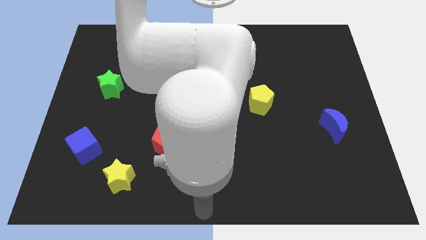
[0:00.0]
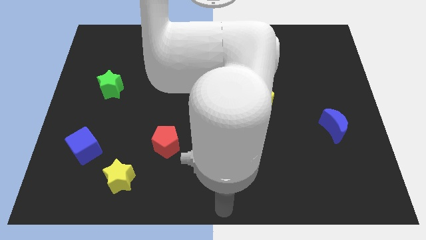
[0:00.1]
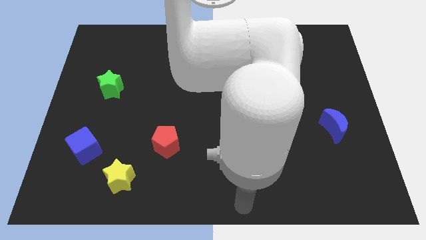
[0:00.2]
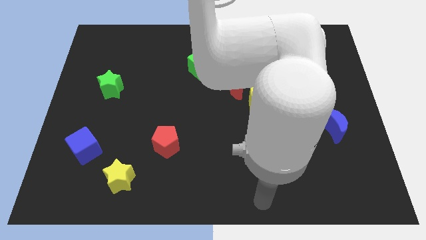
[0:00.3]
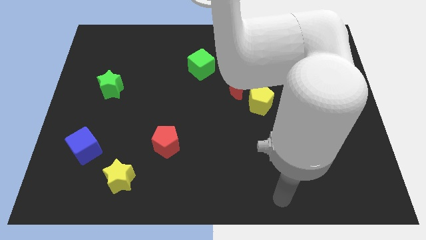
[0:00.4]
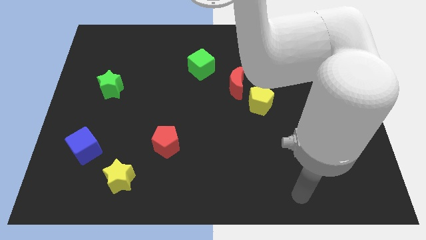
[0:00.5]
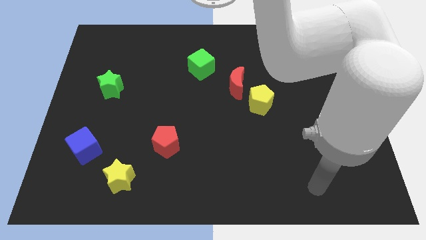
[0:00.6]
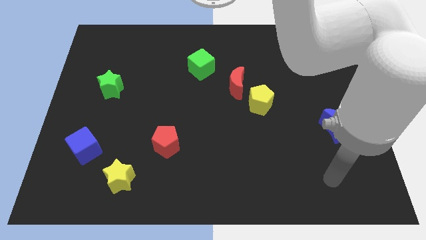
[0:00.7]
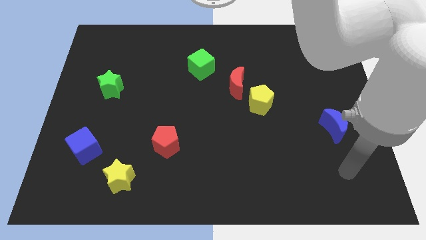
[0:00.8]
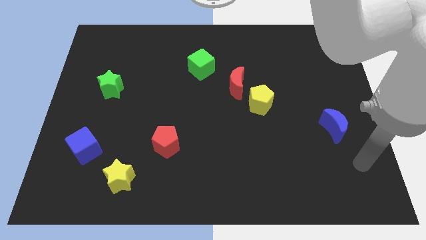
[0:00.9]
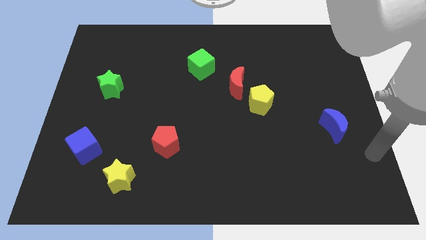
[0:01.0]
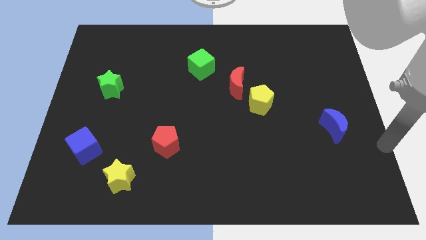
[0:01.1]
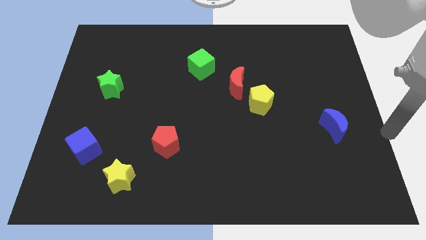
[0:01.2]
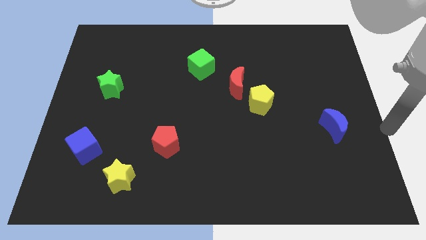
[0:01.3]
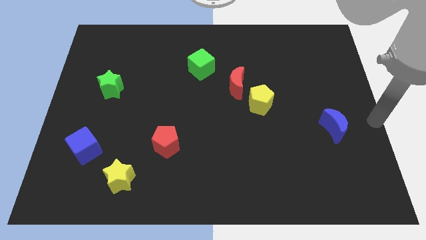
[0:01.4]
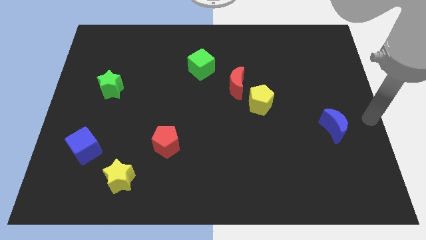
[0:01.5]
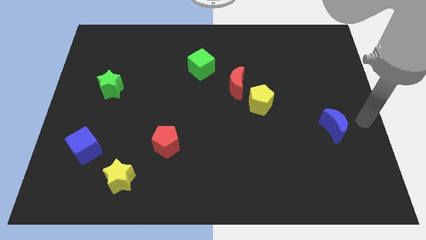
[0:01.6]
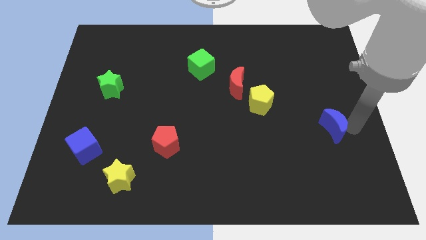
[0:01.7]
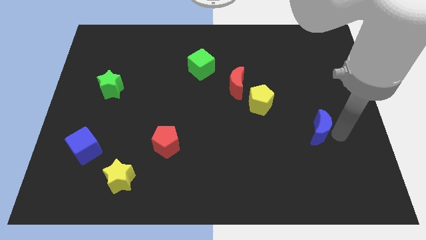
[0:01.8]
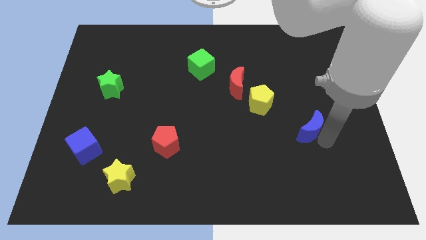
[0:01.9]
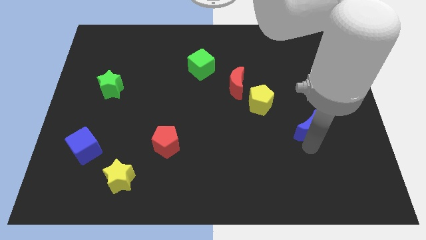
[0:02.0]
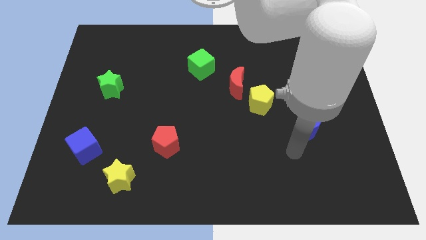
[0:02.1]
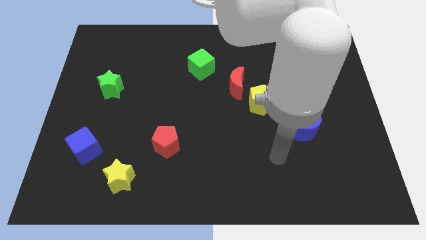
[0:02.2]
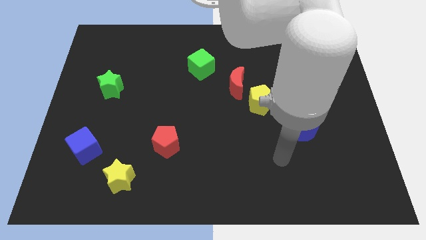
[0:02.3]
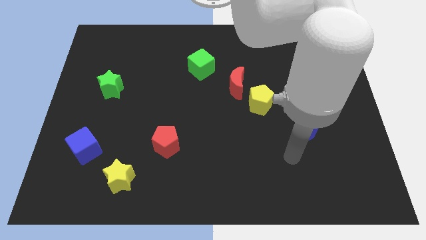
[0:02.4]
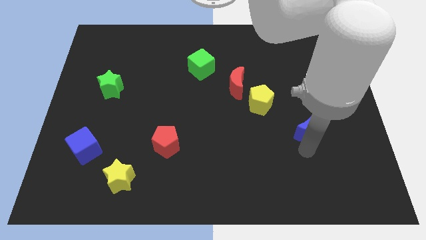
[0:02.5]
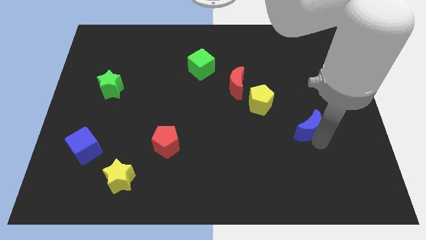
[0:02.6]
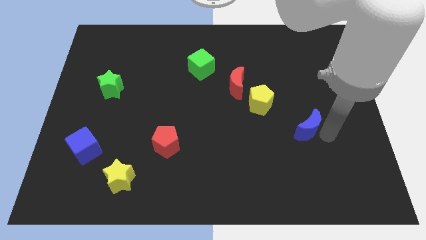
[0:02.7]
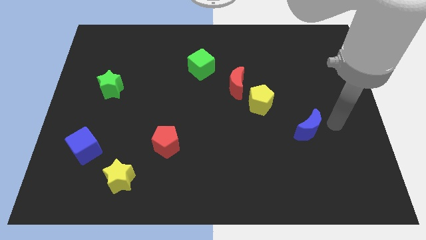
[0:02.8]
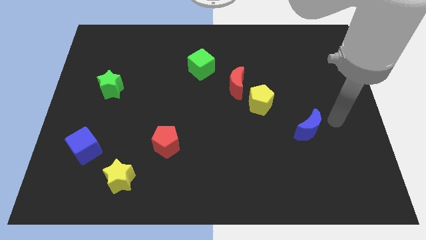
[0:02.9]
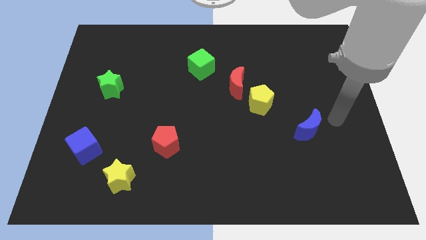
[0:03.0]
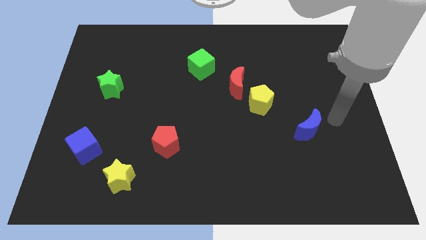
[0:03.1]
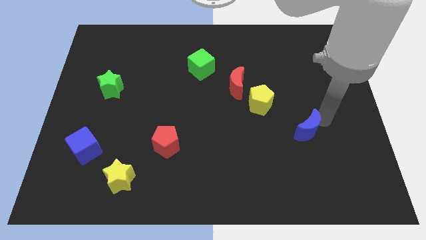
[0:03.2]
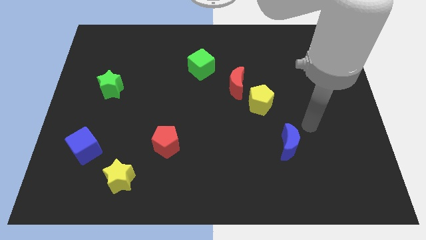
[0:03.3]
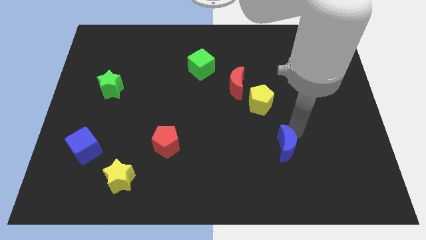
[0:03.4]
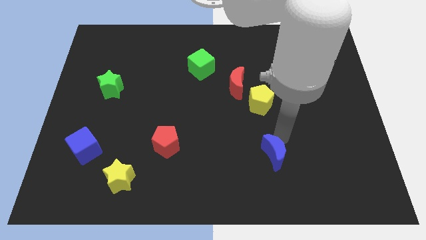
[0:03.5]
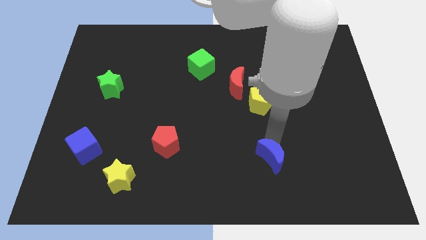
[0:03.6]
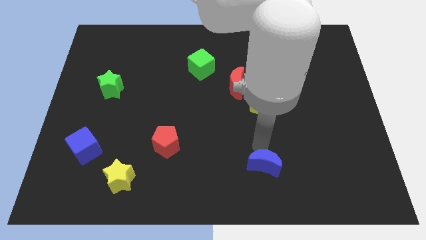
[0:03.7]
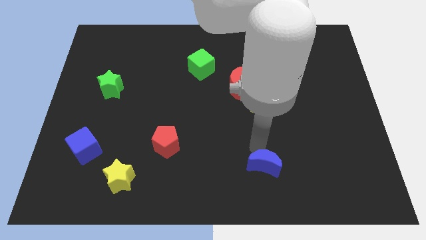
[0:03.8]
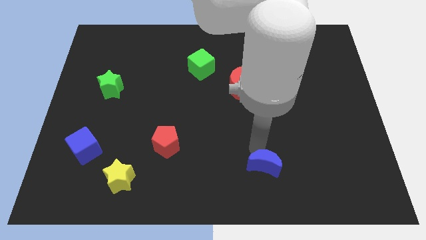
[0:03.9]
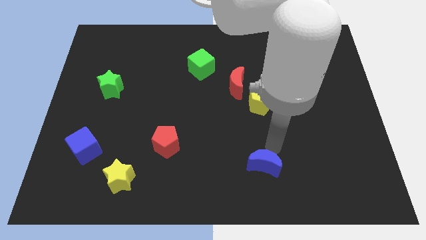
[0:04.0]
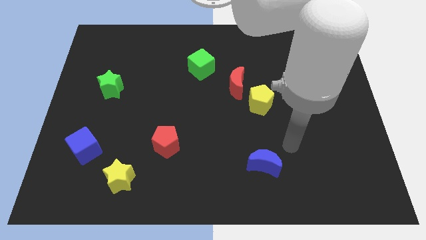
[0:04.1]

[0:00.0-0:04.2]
push the blue crescent vertically below the yelow pentagon

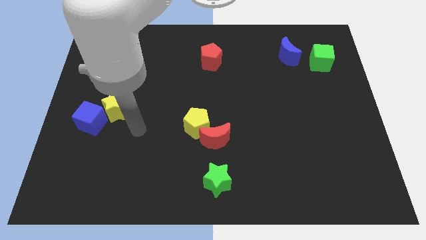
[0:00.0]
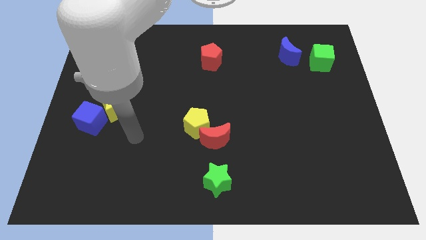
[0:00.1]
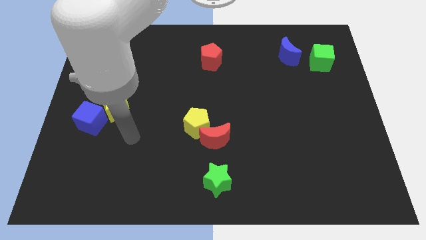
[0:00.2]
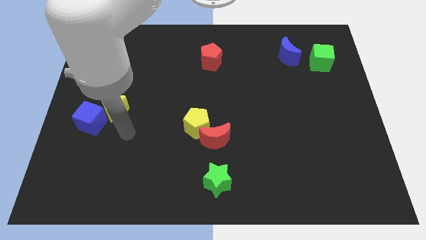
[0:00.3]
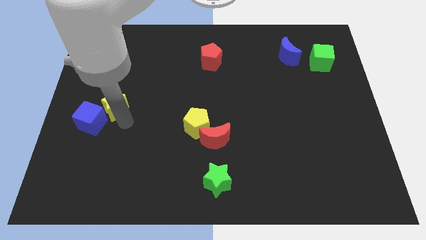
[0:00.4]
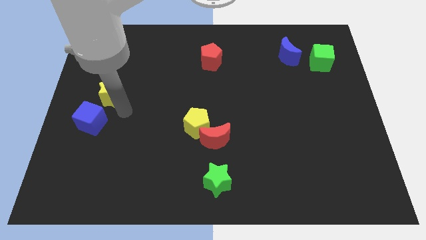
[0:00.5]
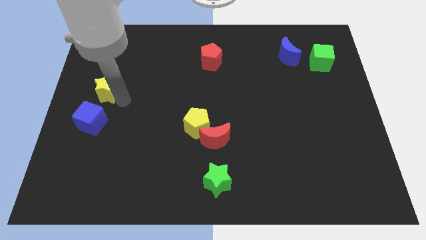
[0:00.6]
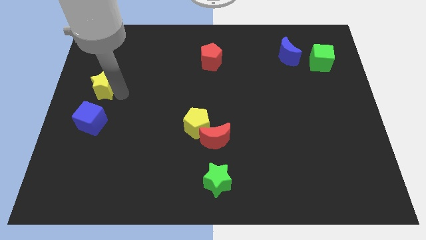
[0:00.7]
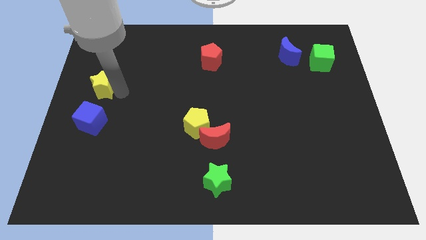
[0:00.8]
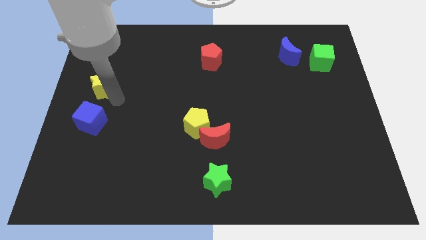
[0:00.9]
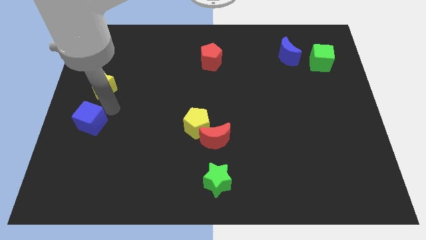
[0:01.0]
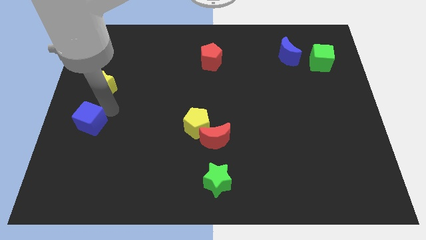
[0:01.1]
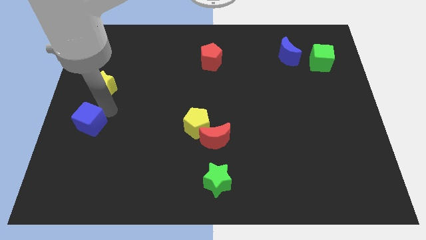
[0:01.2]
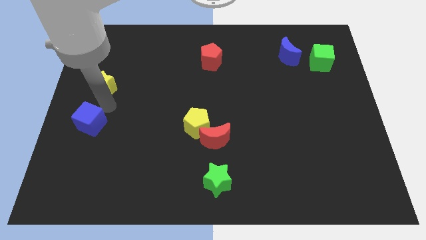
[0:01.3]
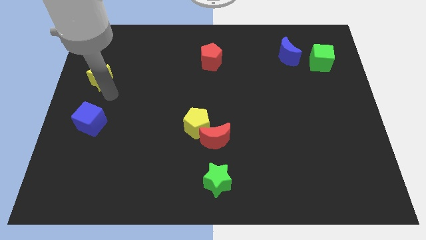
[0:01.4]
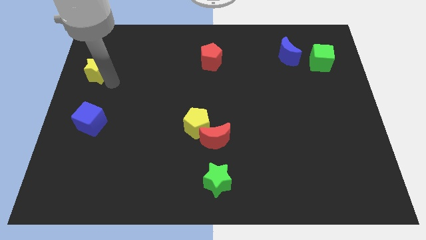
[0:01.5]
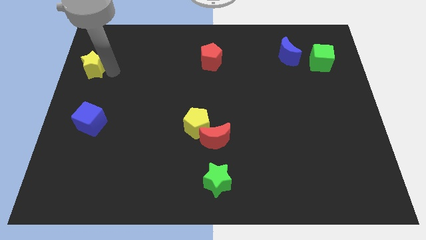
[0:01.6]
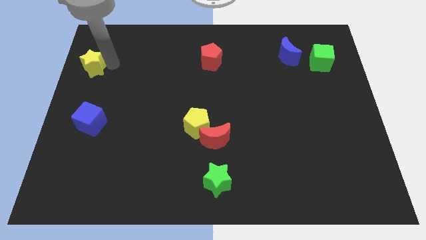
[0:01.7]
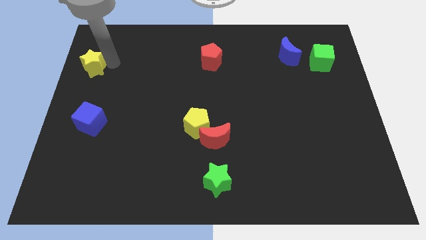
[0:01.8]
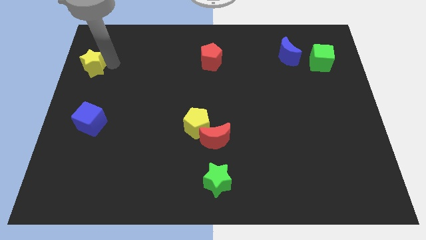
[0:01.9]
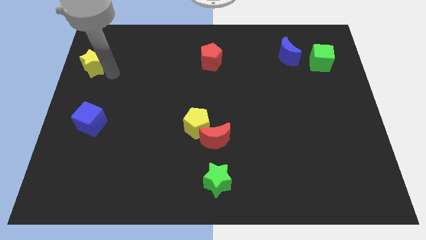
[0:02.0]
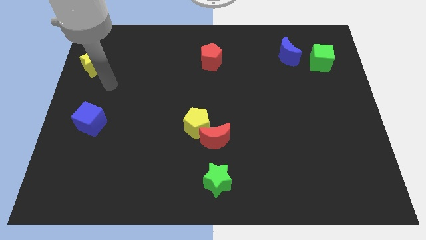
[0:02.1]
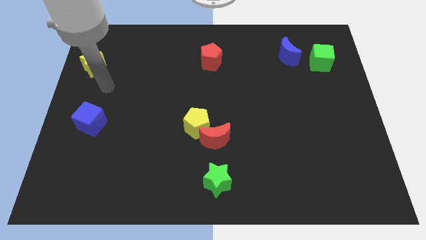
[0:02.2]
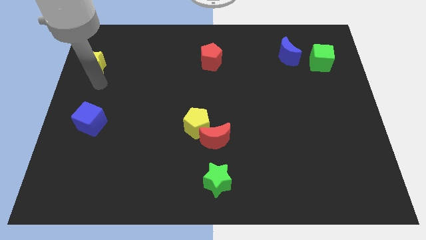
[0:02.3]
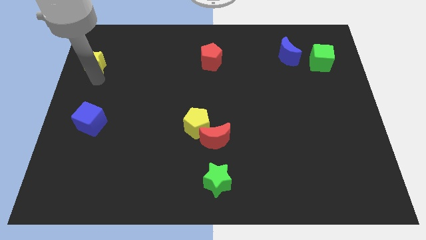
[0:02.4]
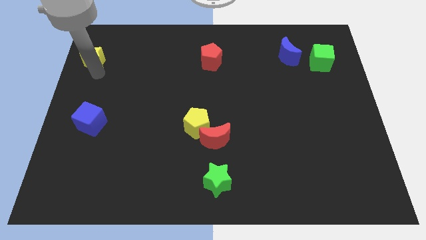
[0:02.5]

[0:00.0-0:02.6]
push the yellow star towards the top left

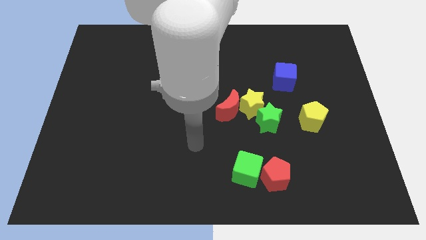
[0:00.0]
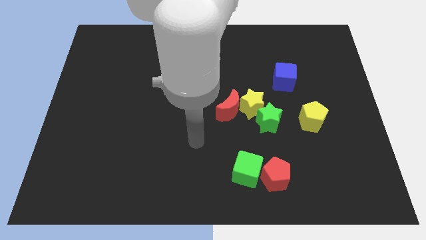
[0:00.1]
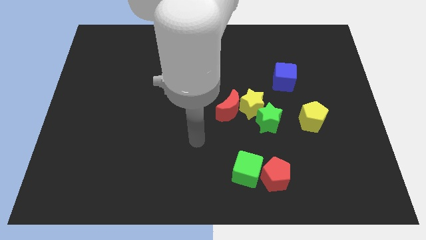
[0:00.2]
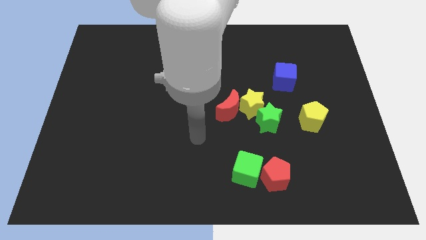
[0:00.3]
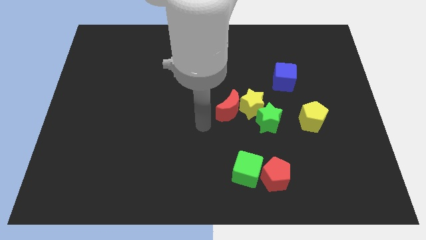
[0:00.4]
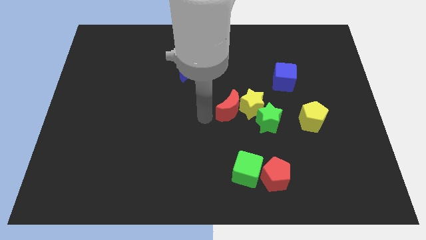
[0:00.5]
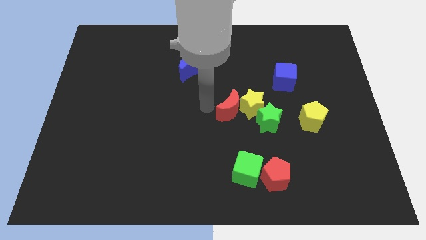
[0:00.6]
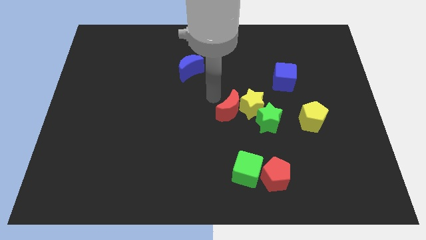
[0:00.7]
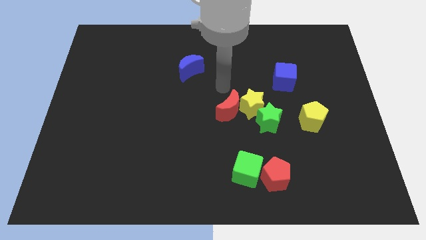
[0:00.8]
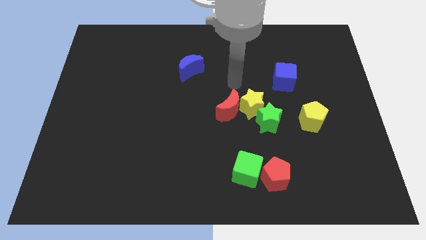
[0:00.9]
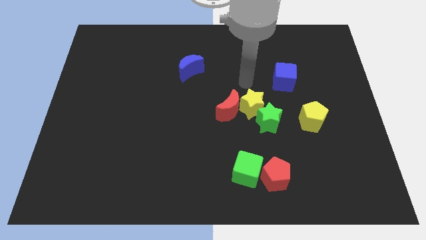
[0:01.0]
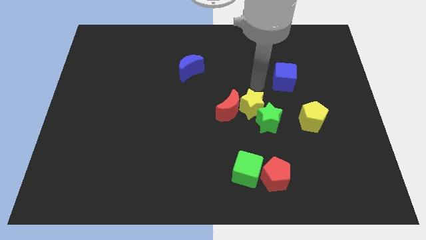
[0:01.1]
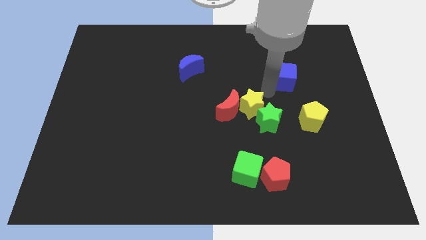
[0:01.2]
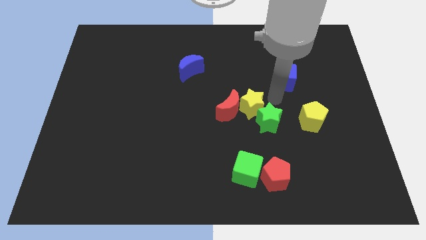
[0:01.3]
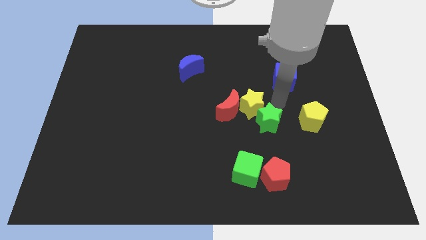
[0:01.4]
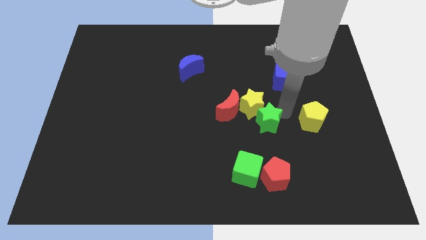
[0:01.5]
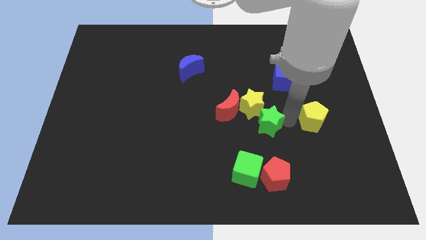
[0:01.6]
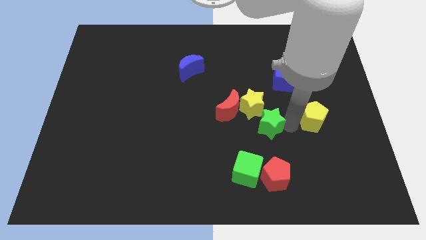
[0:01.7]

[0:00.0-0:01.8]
move near to green star

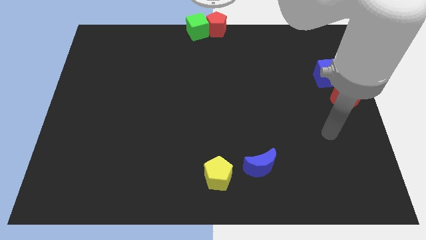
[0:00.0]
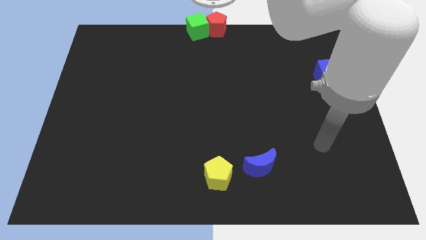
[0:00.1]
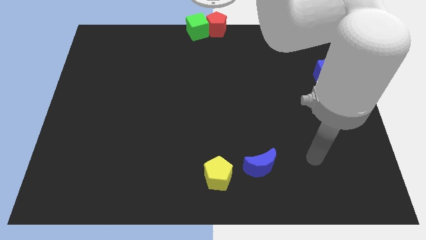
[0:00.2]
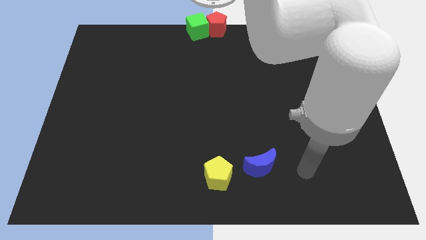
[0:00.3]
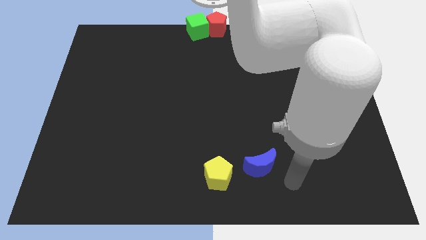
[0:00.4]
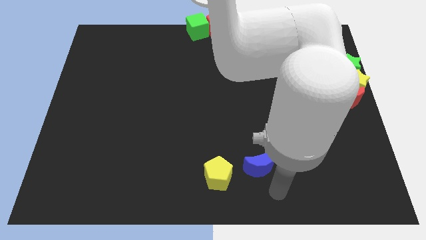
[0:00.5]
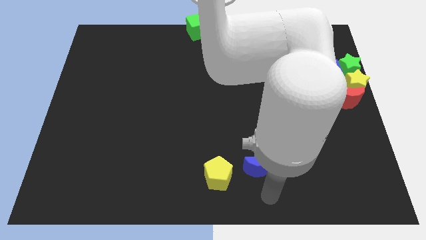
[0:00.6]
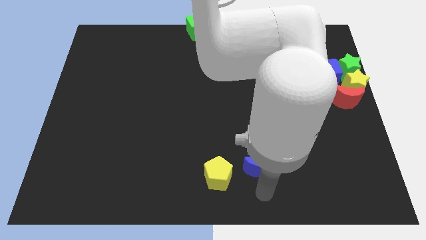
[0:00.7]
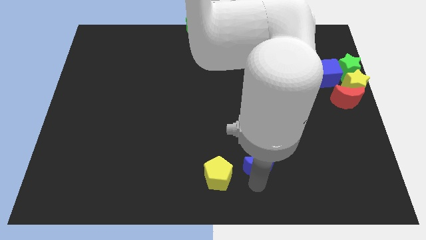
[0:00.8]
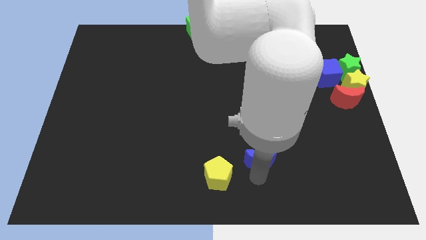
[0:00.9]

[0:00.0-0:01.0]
point your arm at the bottom of the blue crescent
